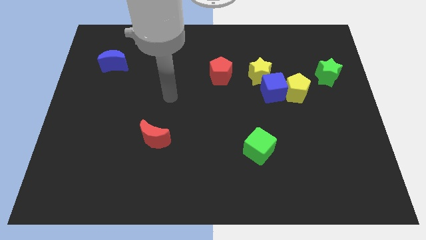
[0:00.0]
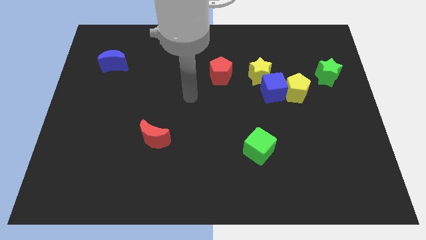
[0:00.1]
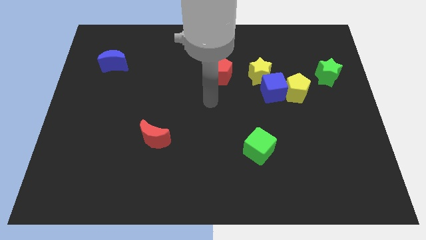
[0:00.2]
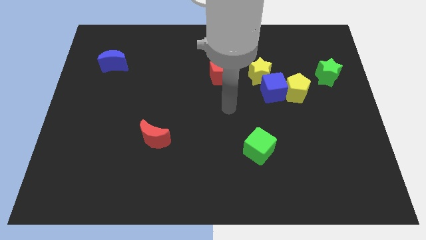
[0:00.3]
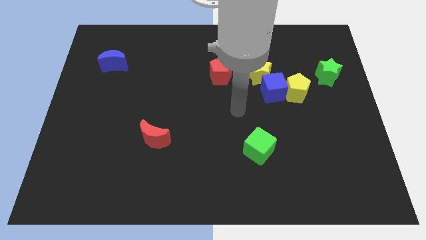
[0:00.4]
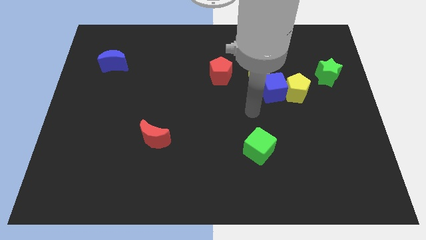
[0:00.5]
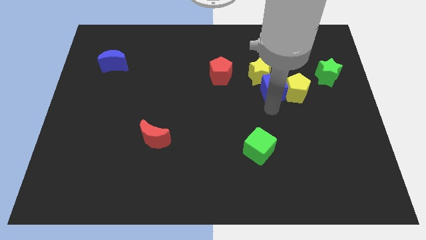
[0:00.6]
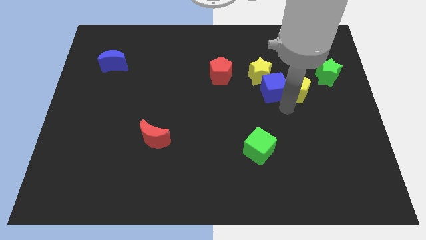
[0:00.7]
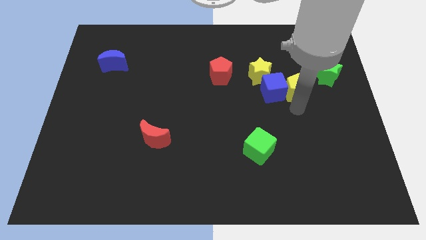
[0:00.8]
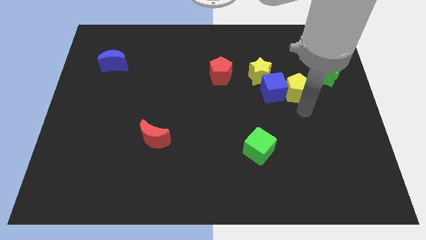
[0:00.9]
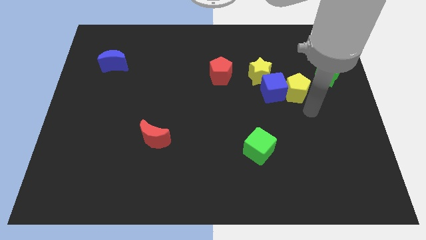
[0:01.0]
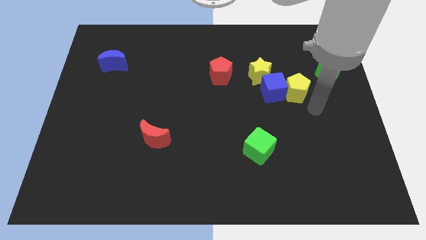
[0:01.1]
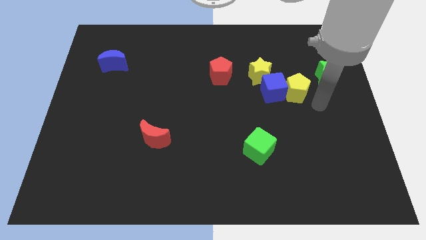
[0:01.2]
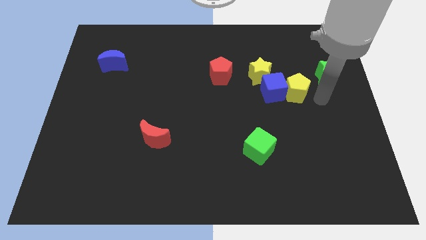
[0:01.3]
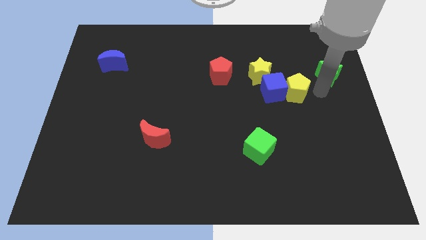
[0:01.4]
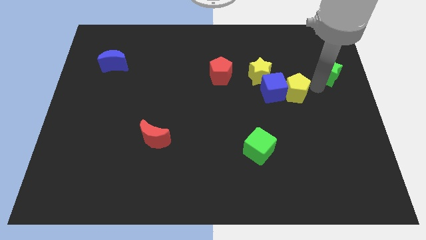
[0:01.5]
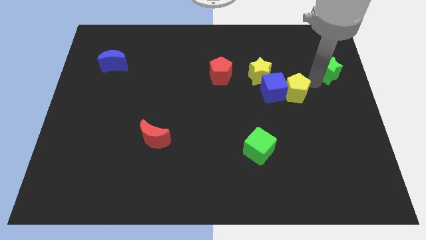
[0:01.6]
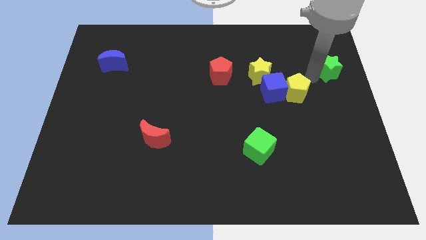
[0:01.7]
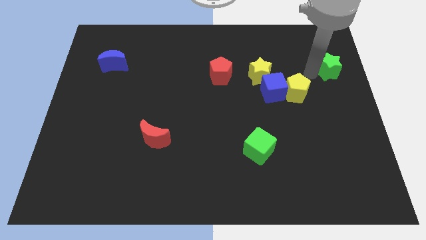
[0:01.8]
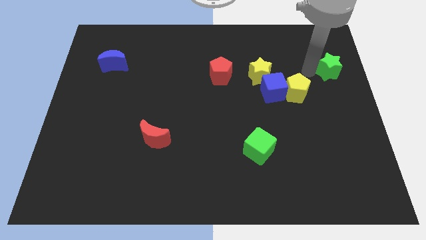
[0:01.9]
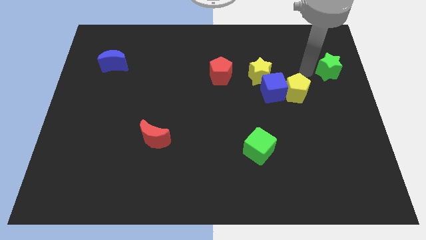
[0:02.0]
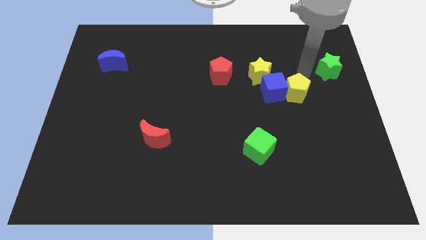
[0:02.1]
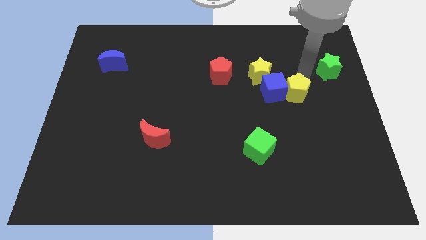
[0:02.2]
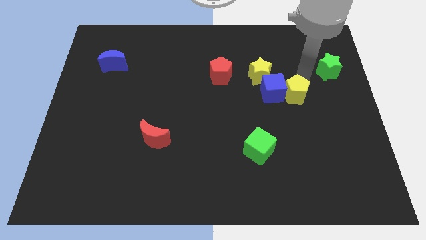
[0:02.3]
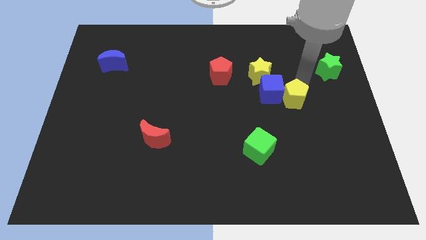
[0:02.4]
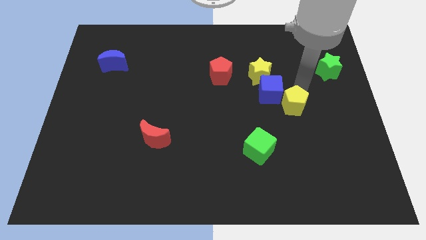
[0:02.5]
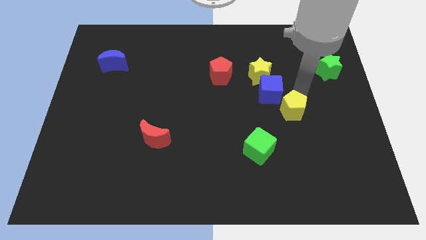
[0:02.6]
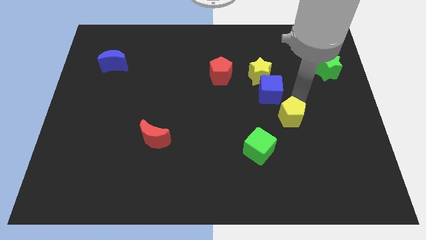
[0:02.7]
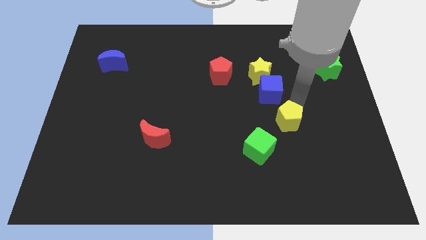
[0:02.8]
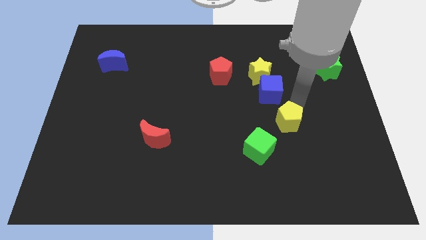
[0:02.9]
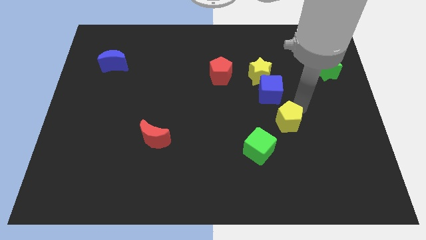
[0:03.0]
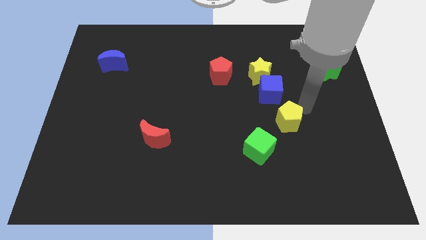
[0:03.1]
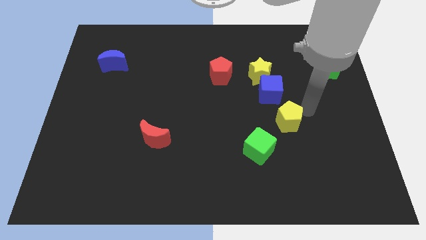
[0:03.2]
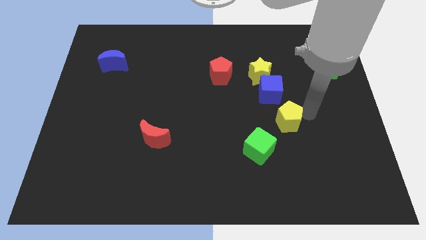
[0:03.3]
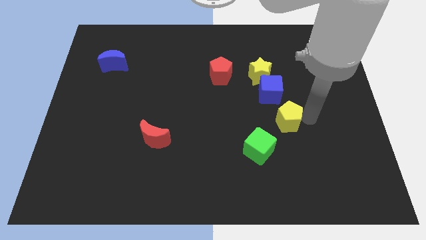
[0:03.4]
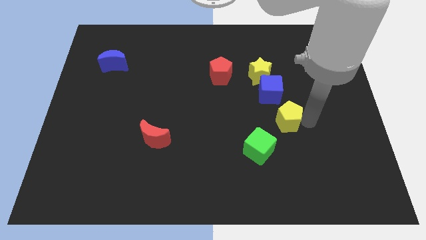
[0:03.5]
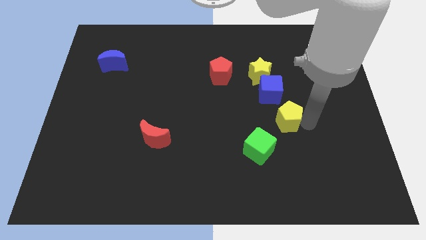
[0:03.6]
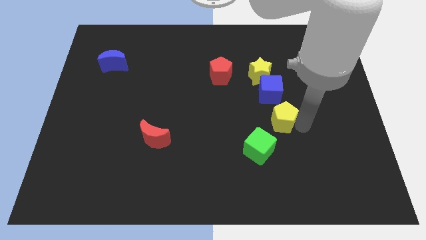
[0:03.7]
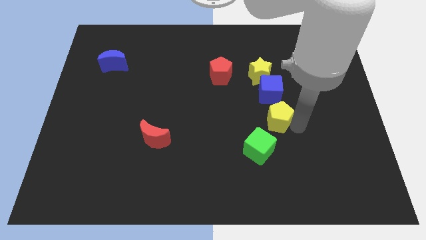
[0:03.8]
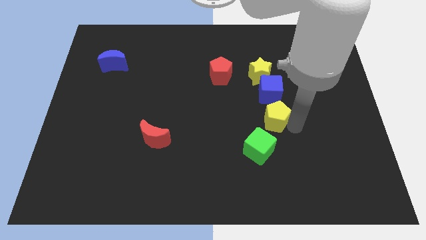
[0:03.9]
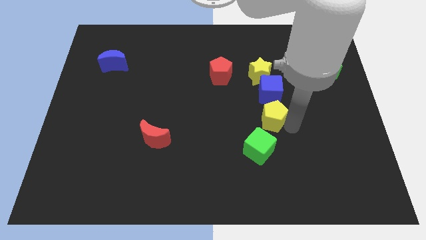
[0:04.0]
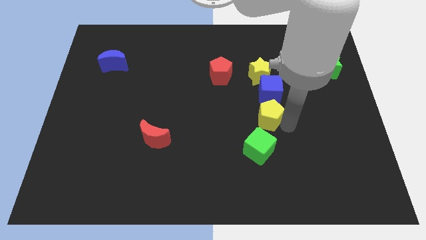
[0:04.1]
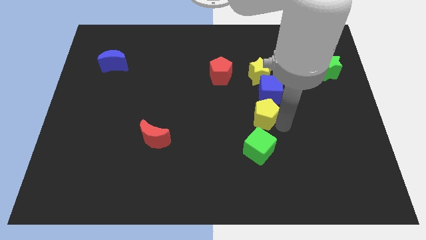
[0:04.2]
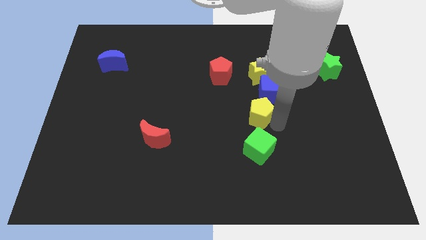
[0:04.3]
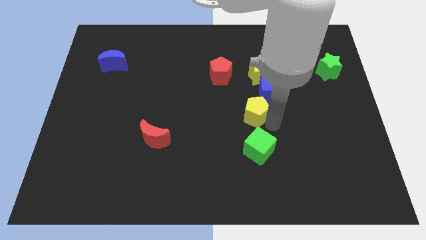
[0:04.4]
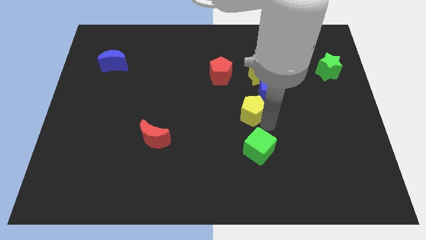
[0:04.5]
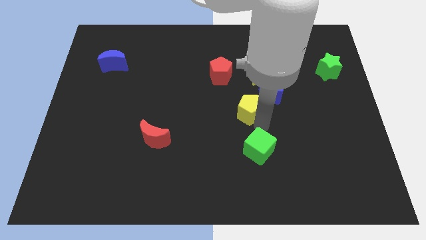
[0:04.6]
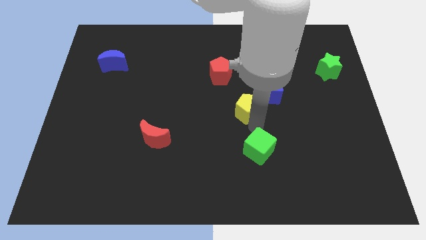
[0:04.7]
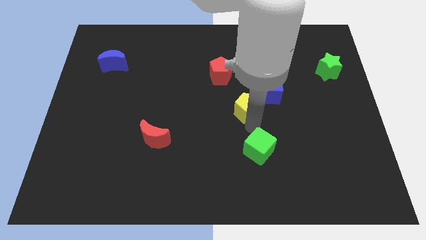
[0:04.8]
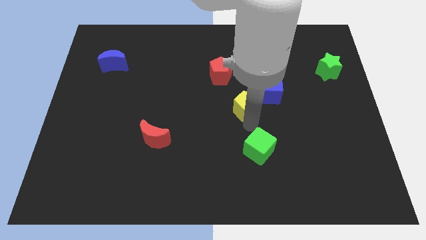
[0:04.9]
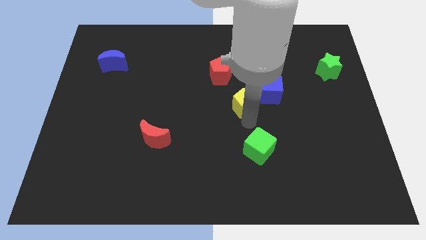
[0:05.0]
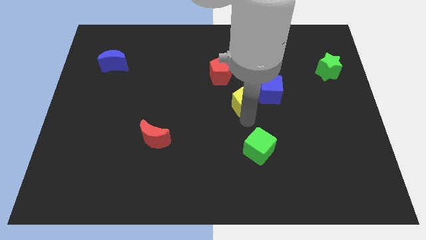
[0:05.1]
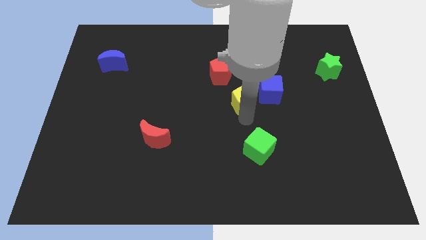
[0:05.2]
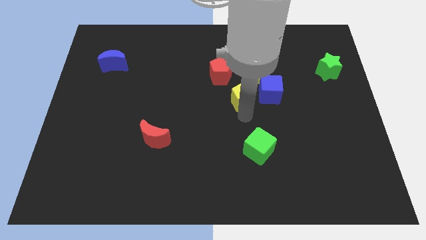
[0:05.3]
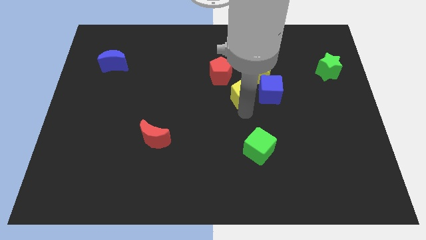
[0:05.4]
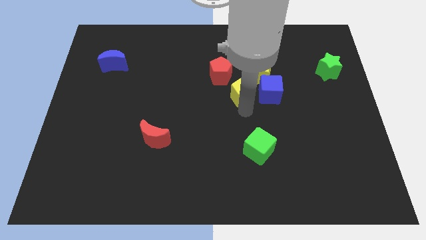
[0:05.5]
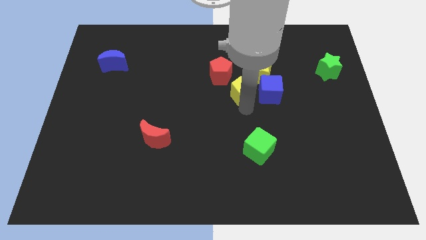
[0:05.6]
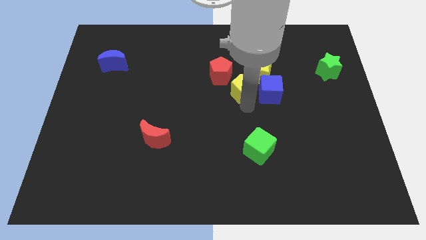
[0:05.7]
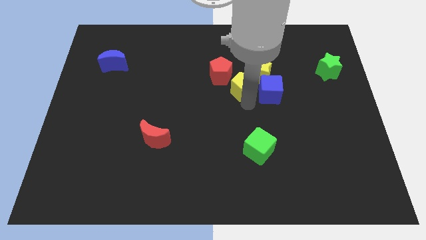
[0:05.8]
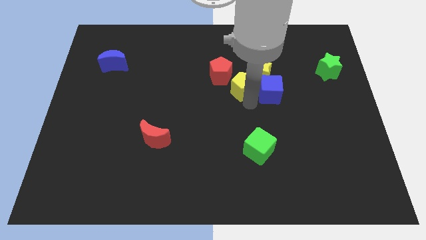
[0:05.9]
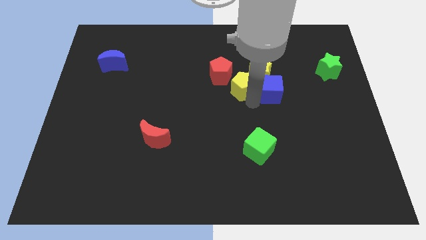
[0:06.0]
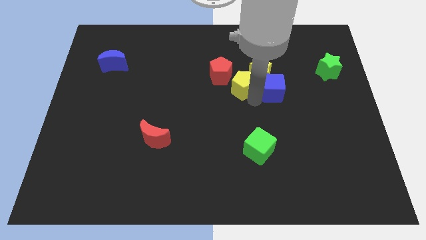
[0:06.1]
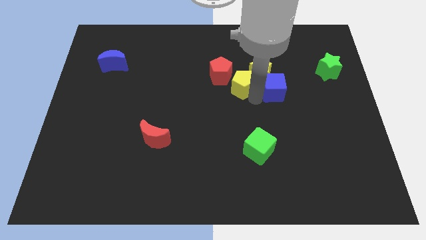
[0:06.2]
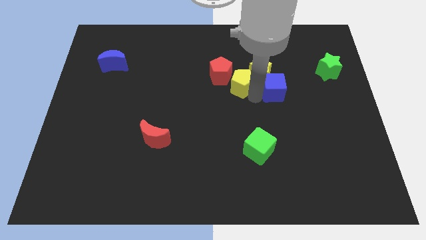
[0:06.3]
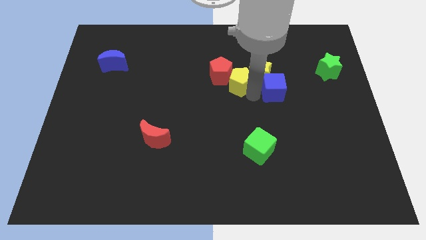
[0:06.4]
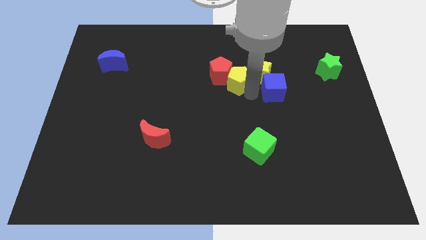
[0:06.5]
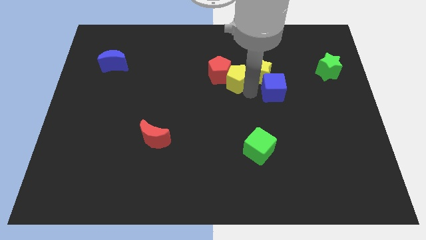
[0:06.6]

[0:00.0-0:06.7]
put the yellow pentagon close to the red pentagon

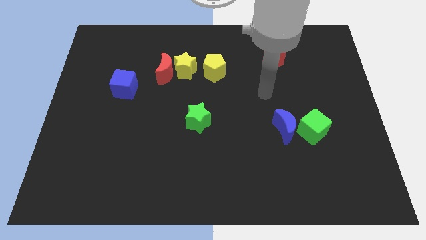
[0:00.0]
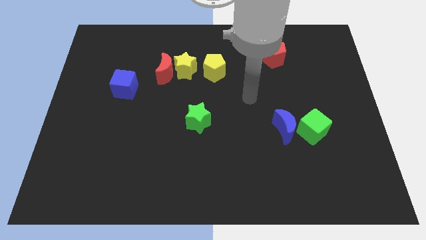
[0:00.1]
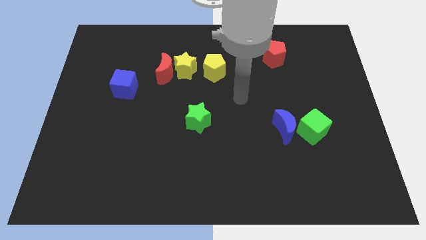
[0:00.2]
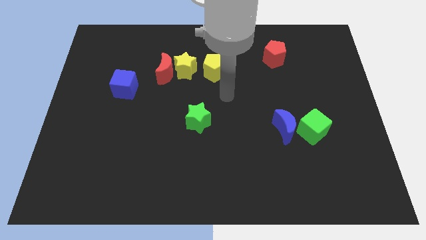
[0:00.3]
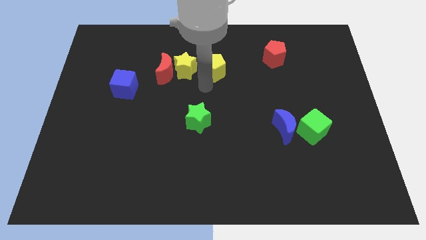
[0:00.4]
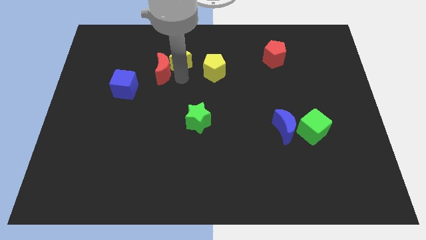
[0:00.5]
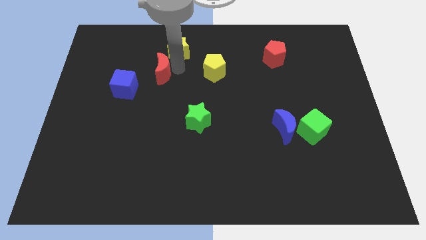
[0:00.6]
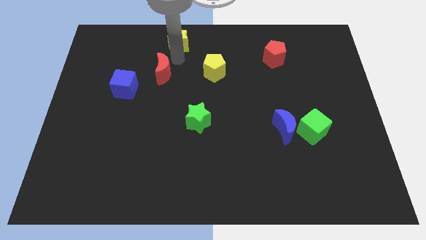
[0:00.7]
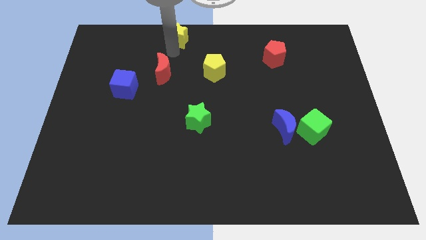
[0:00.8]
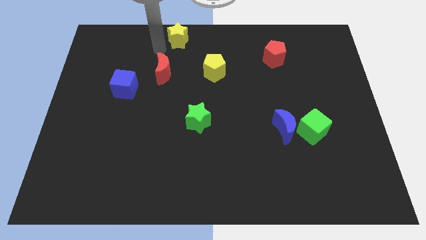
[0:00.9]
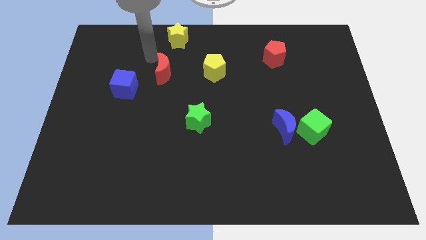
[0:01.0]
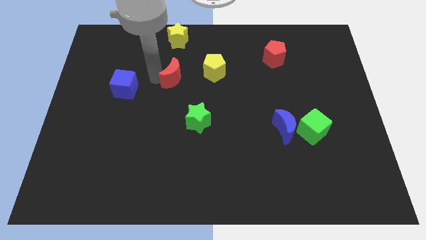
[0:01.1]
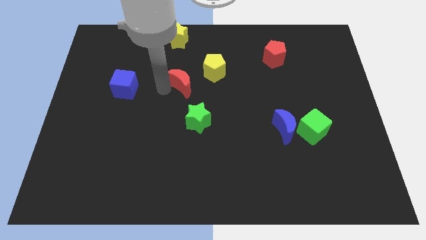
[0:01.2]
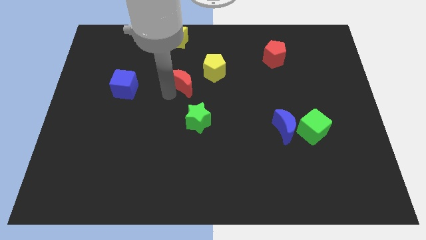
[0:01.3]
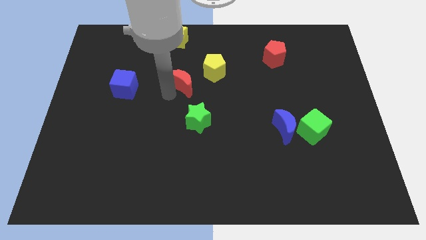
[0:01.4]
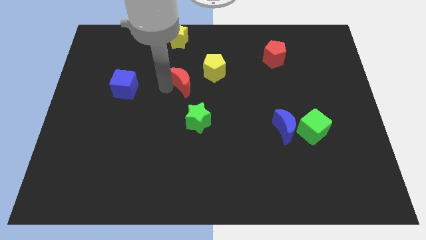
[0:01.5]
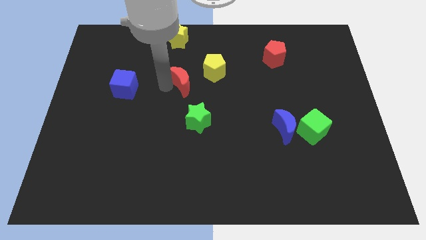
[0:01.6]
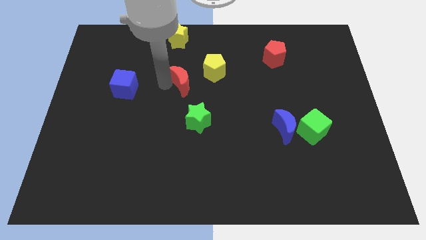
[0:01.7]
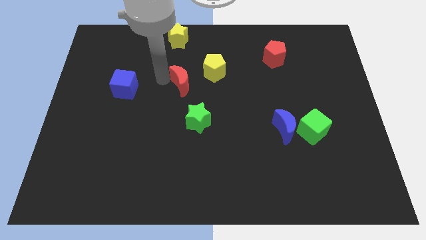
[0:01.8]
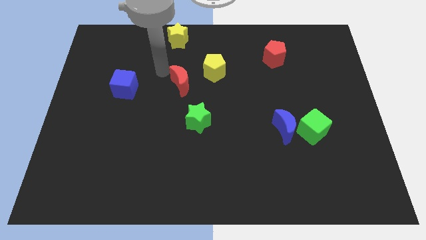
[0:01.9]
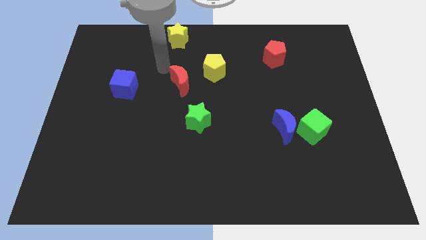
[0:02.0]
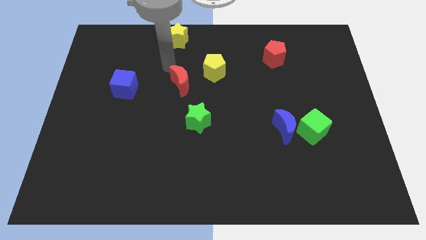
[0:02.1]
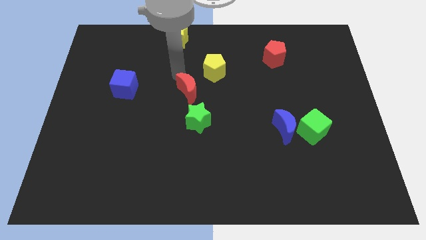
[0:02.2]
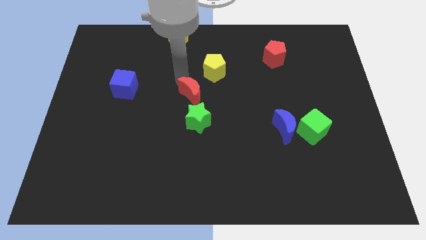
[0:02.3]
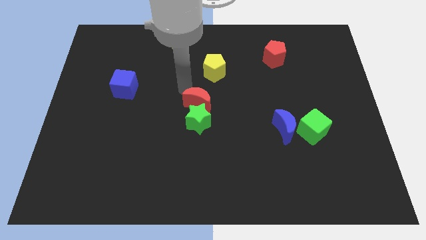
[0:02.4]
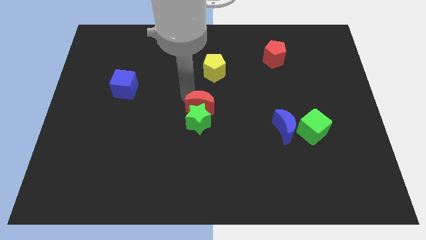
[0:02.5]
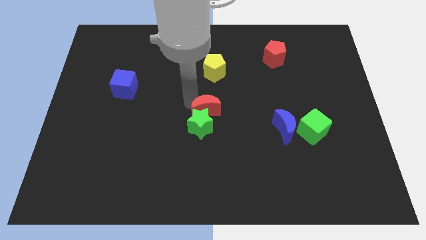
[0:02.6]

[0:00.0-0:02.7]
move the red moon towards the green star
